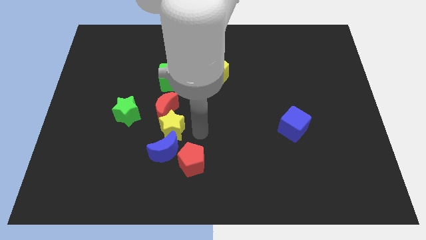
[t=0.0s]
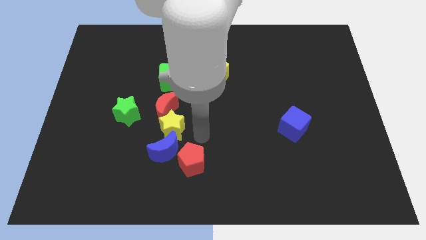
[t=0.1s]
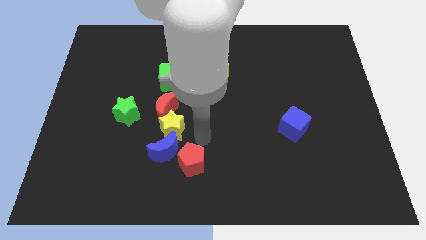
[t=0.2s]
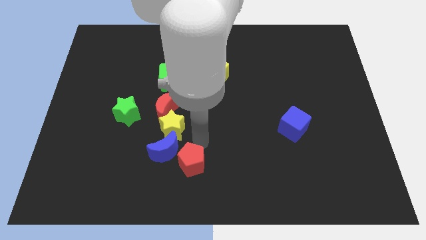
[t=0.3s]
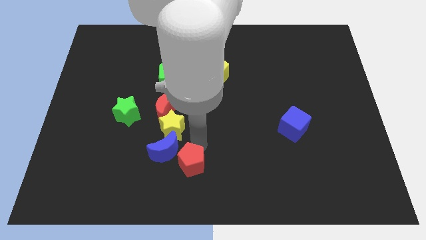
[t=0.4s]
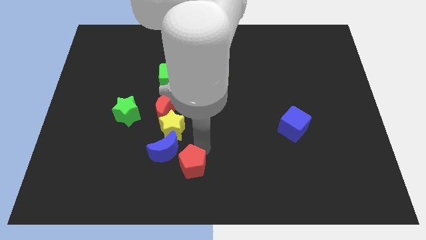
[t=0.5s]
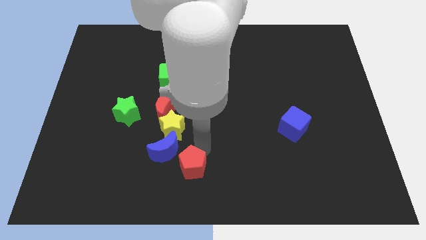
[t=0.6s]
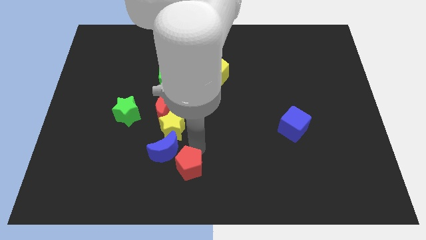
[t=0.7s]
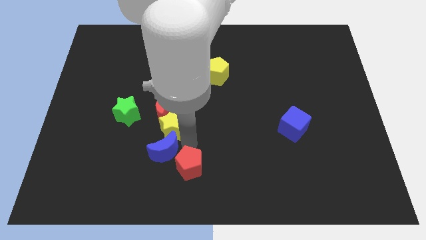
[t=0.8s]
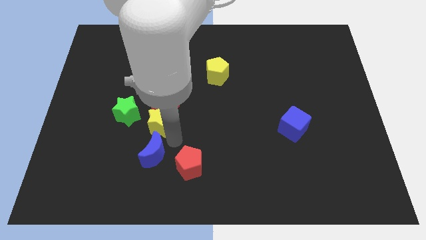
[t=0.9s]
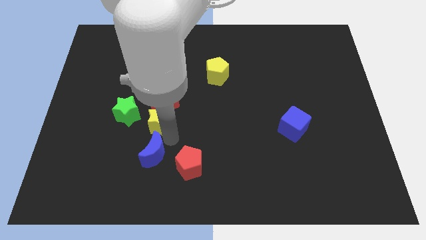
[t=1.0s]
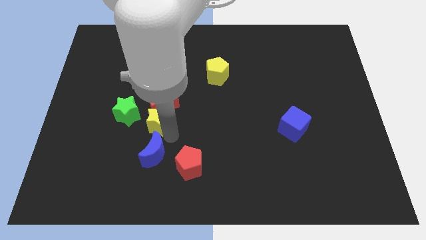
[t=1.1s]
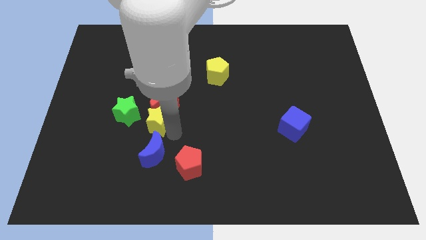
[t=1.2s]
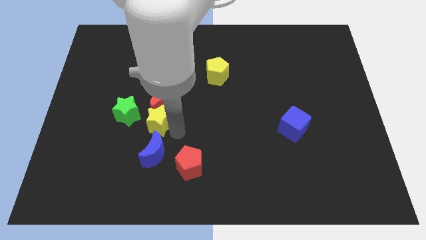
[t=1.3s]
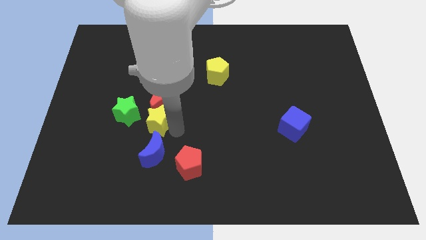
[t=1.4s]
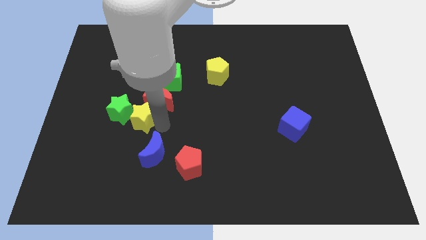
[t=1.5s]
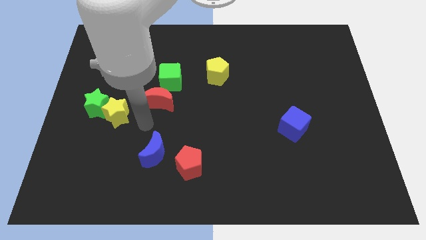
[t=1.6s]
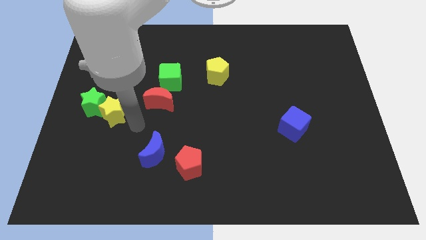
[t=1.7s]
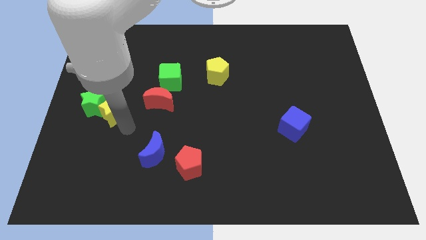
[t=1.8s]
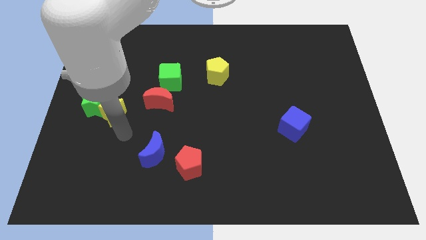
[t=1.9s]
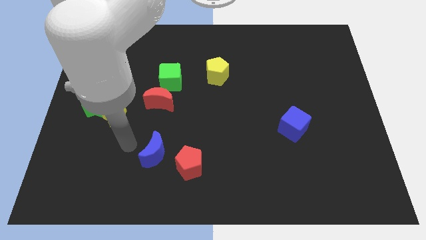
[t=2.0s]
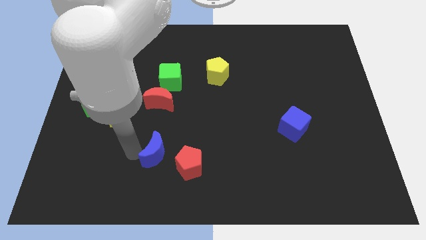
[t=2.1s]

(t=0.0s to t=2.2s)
move the green and yellow star slightly to left

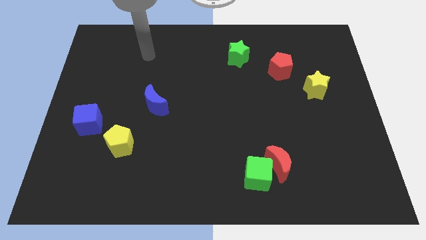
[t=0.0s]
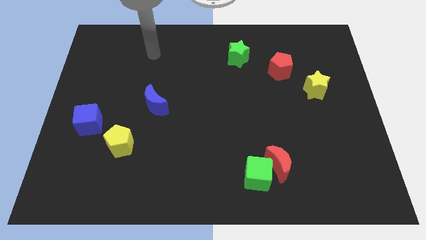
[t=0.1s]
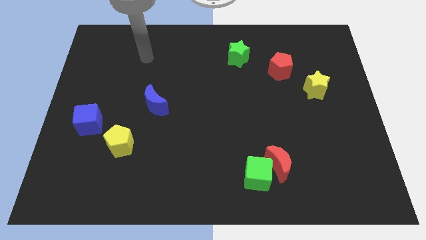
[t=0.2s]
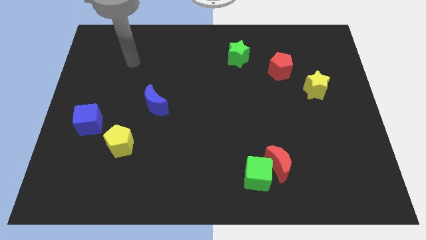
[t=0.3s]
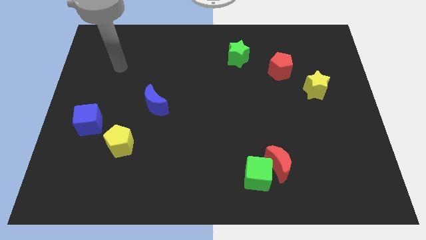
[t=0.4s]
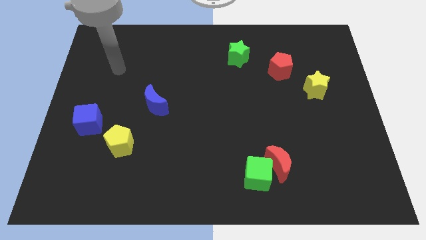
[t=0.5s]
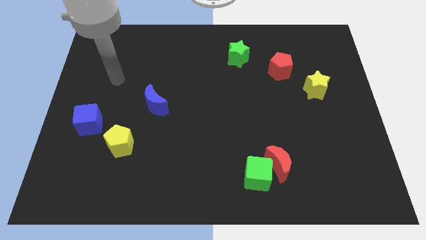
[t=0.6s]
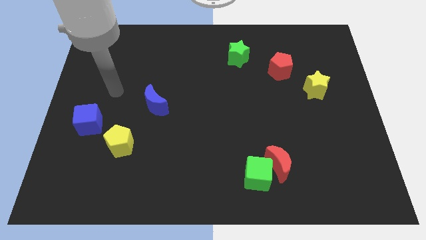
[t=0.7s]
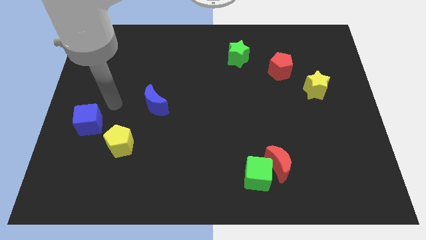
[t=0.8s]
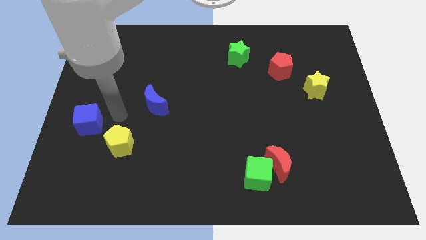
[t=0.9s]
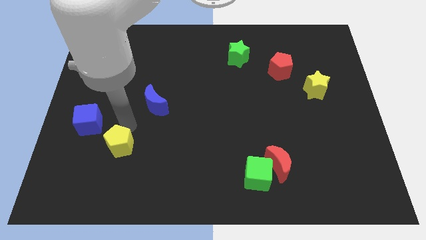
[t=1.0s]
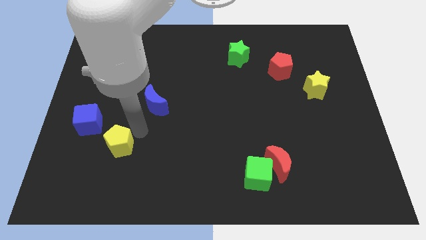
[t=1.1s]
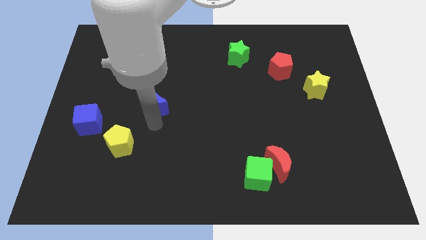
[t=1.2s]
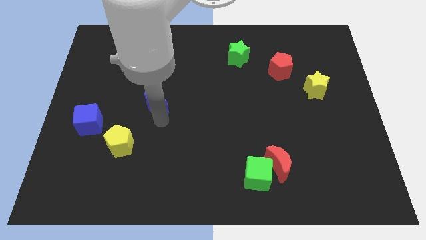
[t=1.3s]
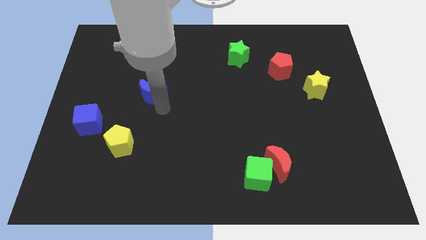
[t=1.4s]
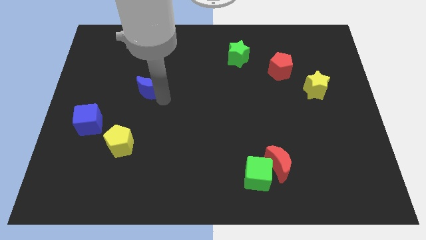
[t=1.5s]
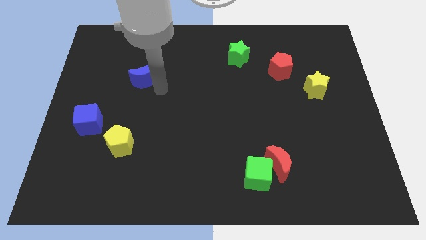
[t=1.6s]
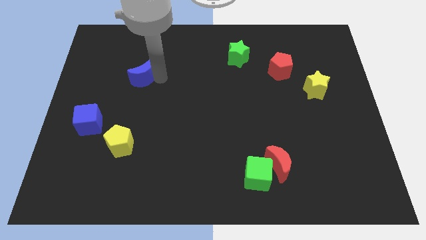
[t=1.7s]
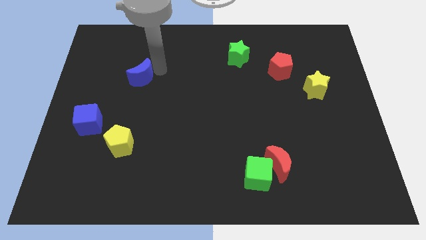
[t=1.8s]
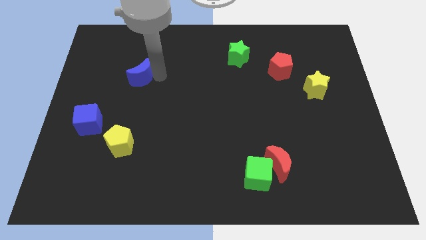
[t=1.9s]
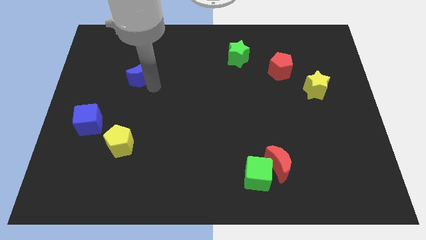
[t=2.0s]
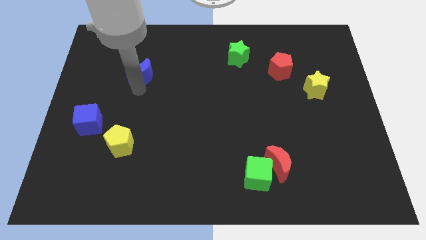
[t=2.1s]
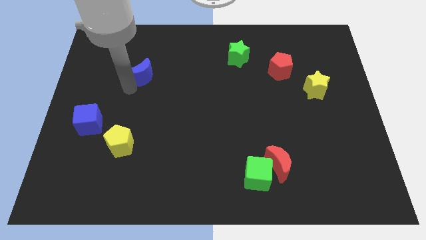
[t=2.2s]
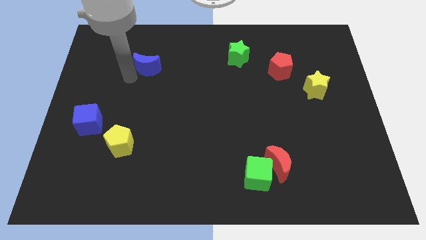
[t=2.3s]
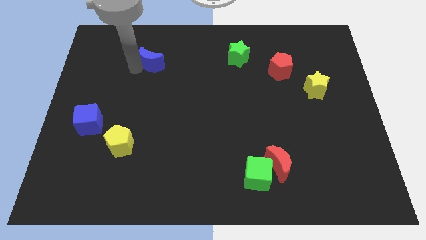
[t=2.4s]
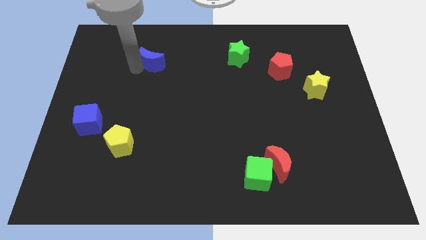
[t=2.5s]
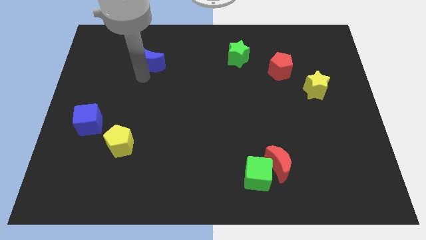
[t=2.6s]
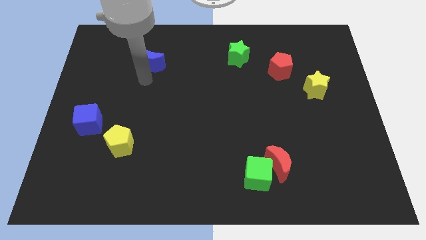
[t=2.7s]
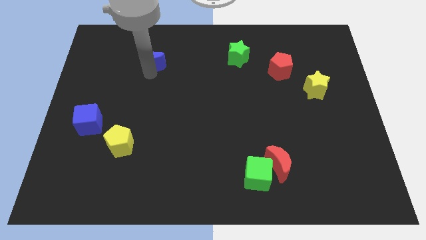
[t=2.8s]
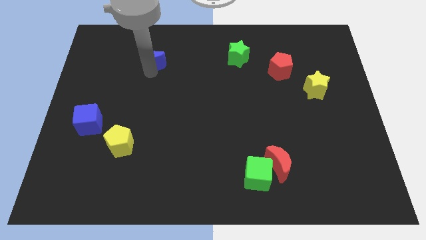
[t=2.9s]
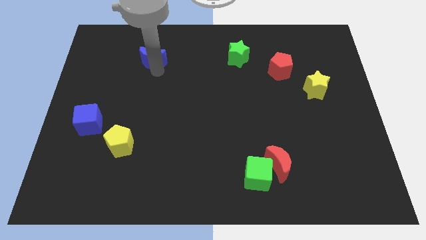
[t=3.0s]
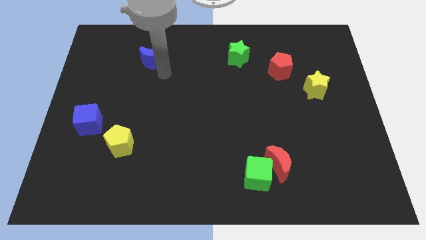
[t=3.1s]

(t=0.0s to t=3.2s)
push the blue crescent towards the top side of board

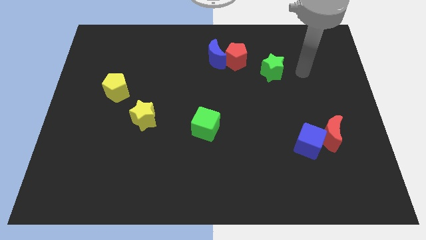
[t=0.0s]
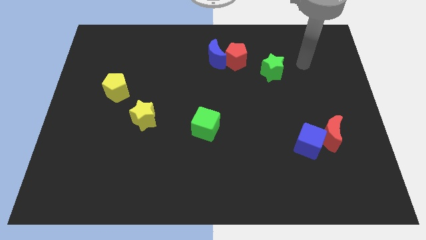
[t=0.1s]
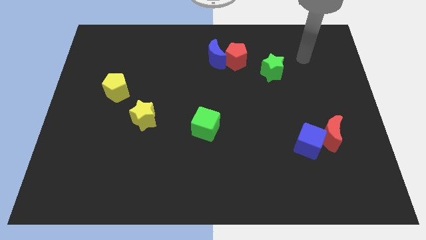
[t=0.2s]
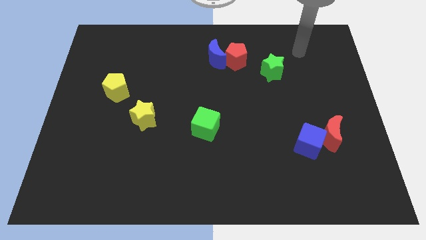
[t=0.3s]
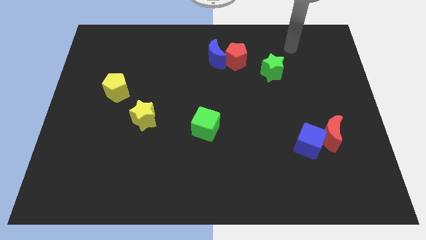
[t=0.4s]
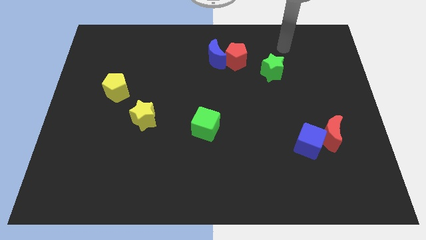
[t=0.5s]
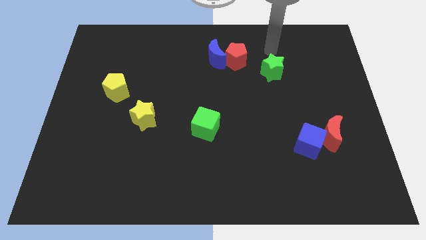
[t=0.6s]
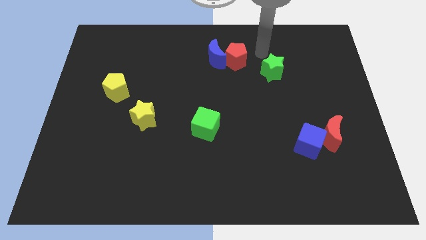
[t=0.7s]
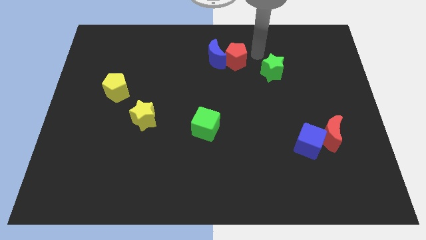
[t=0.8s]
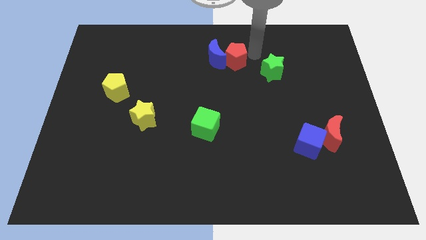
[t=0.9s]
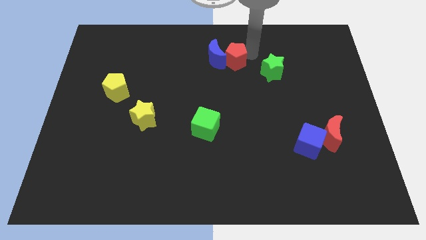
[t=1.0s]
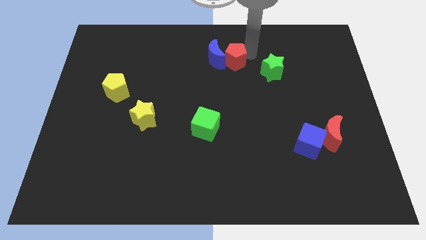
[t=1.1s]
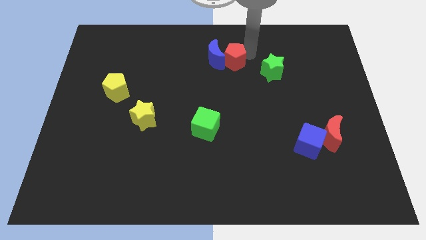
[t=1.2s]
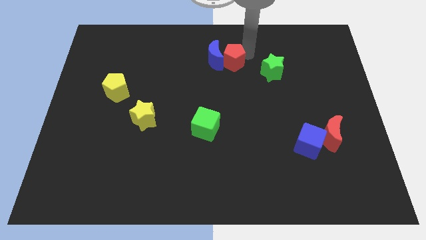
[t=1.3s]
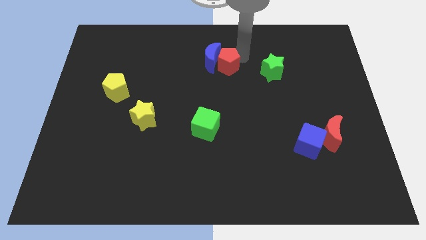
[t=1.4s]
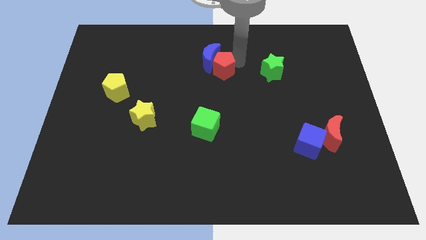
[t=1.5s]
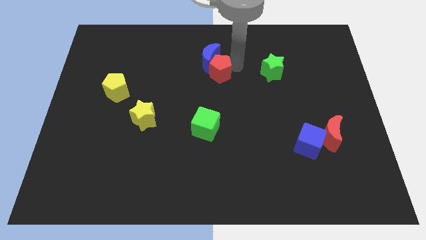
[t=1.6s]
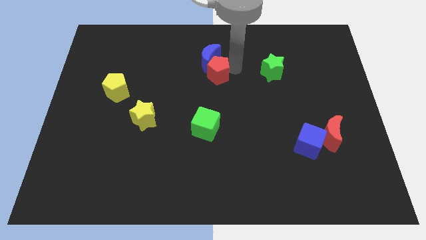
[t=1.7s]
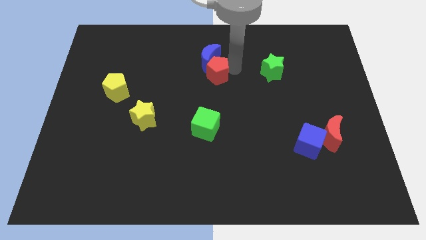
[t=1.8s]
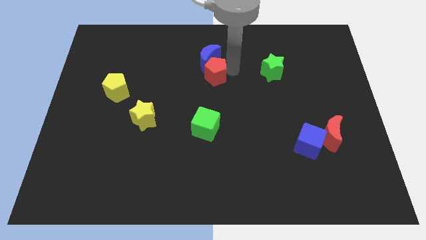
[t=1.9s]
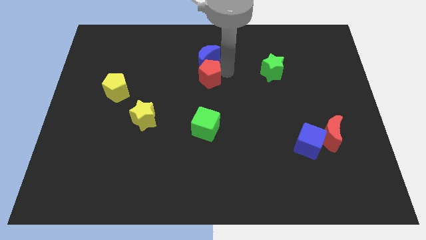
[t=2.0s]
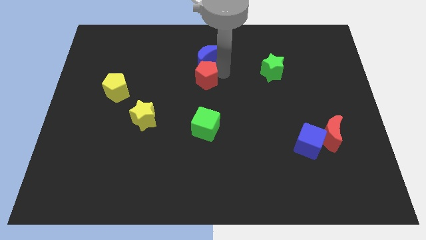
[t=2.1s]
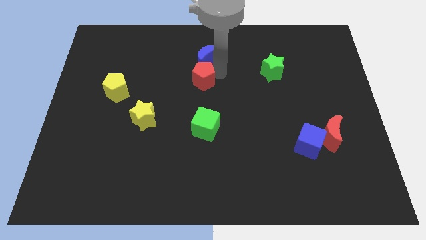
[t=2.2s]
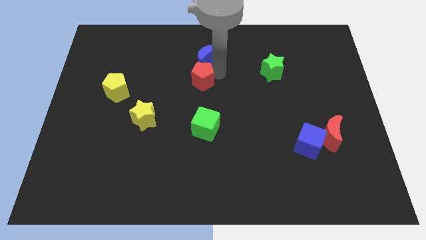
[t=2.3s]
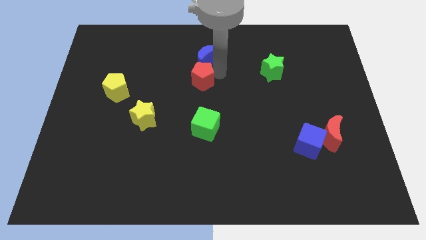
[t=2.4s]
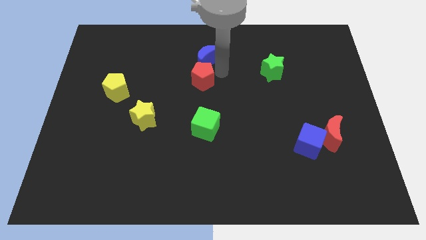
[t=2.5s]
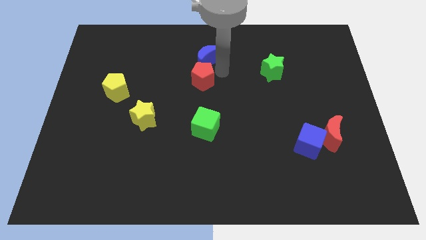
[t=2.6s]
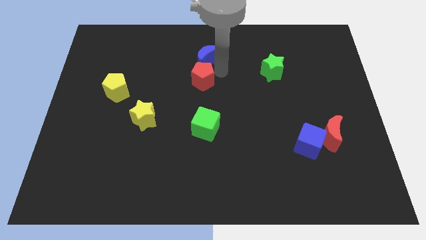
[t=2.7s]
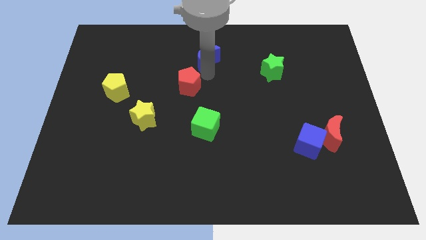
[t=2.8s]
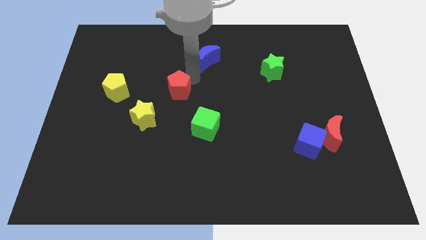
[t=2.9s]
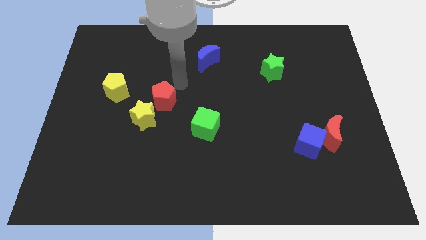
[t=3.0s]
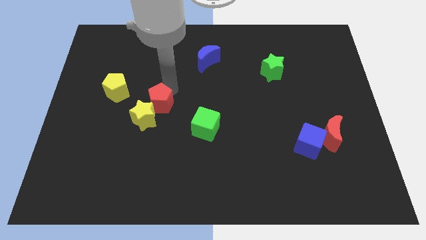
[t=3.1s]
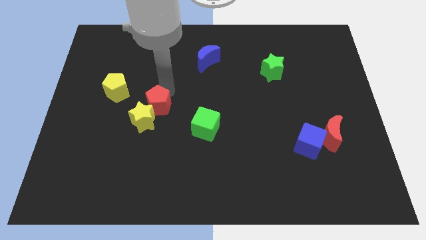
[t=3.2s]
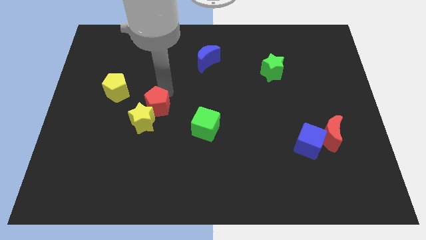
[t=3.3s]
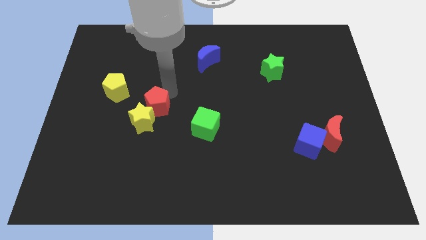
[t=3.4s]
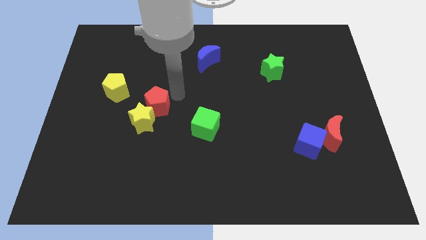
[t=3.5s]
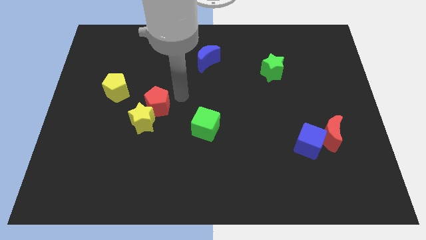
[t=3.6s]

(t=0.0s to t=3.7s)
push the red pentagon into the yellow star
